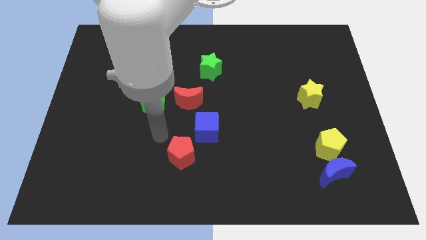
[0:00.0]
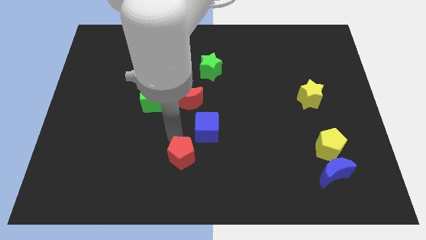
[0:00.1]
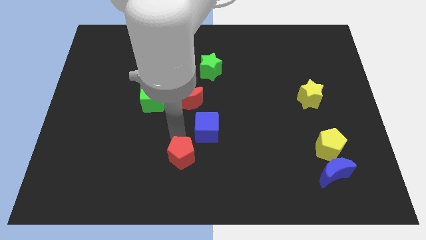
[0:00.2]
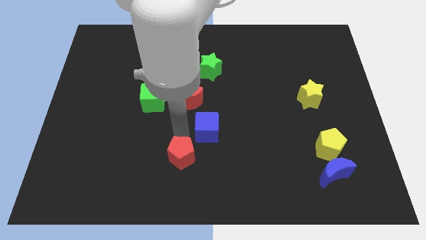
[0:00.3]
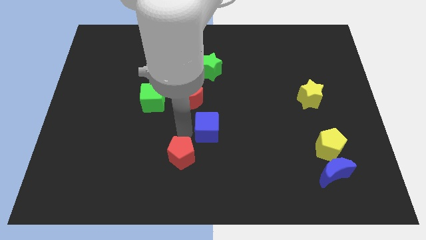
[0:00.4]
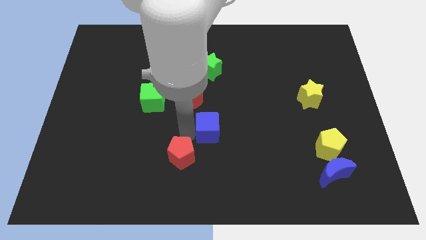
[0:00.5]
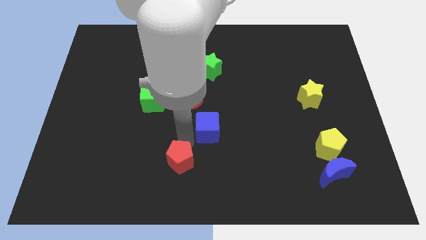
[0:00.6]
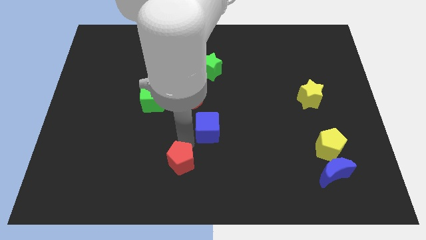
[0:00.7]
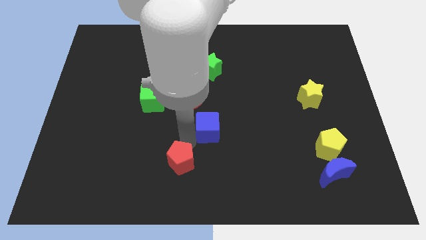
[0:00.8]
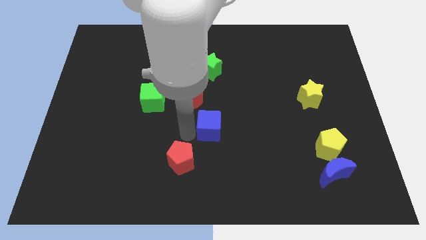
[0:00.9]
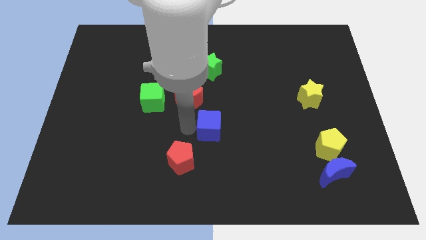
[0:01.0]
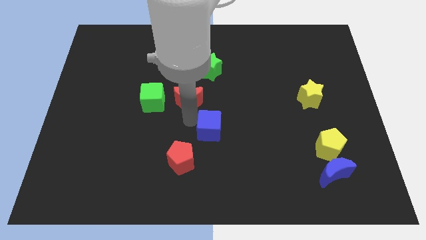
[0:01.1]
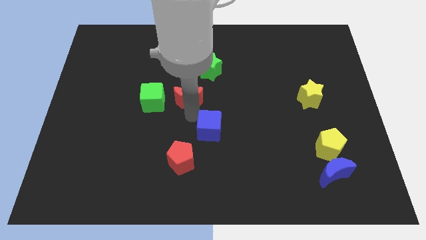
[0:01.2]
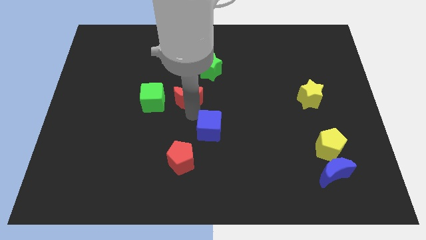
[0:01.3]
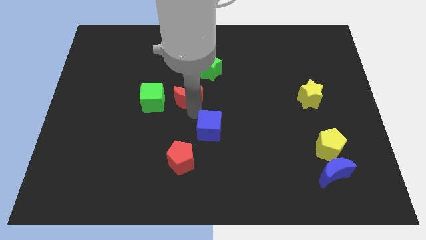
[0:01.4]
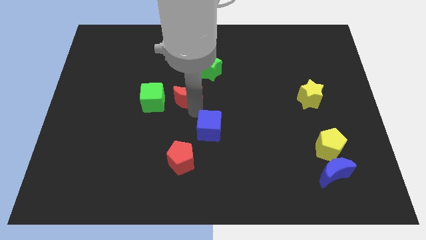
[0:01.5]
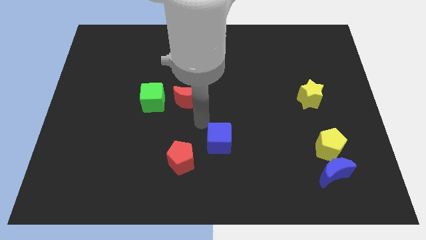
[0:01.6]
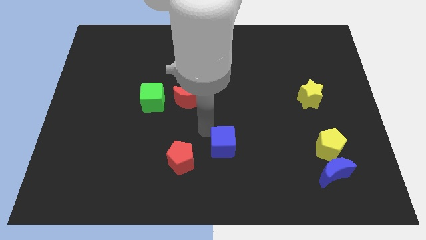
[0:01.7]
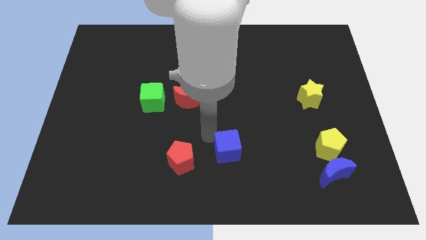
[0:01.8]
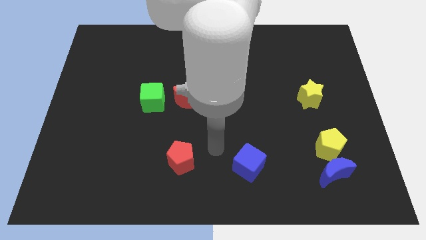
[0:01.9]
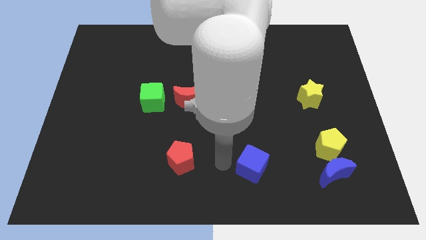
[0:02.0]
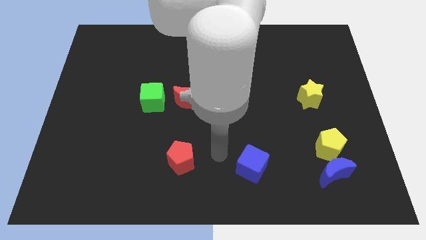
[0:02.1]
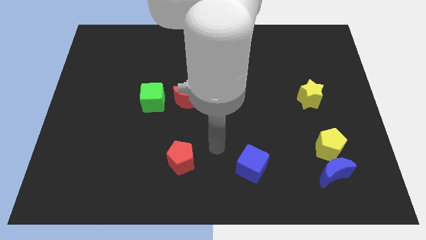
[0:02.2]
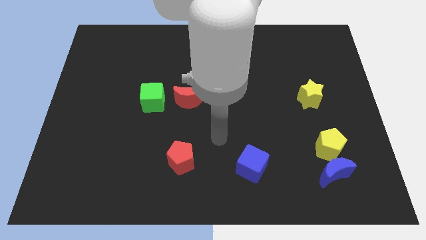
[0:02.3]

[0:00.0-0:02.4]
push the blue cube diagonal to yellow star

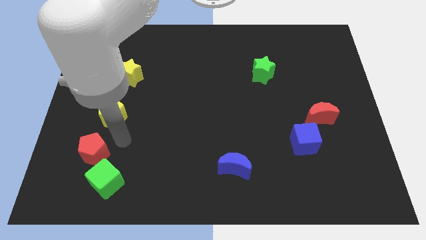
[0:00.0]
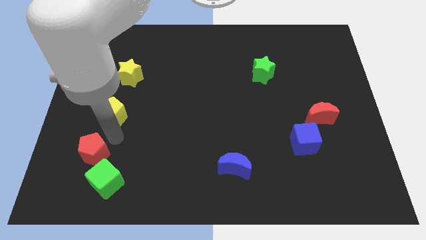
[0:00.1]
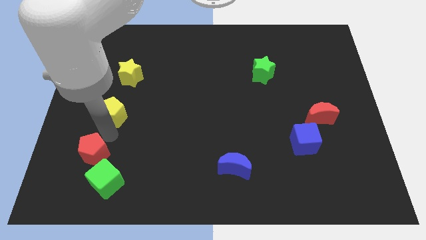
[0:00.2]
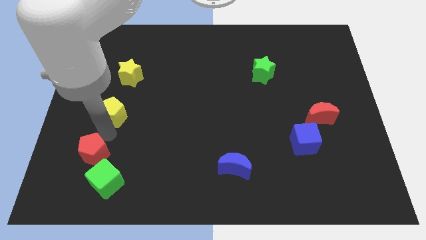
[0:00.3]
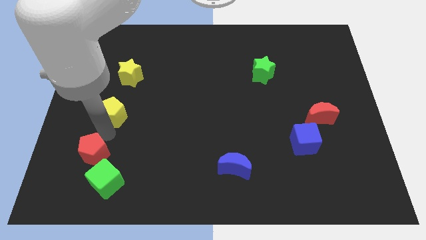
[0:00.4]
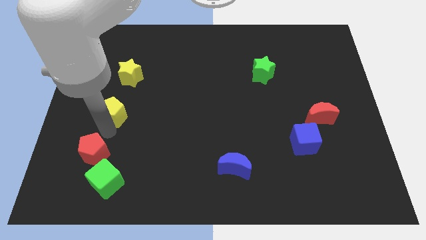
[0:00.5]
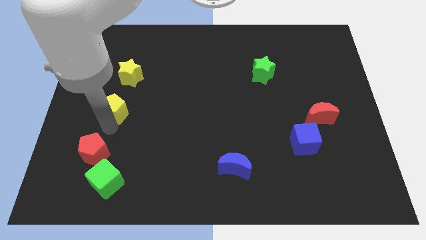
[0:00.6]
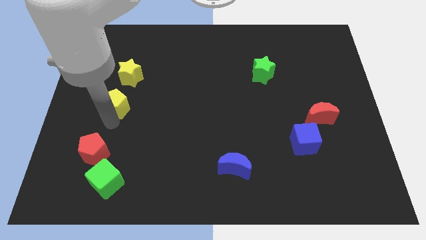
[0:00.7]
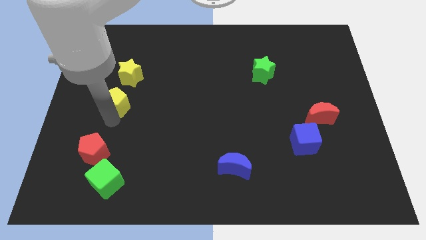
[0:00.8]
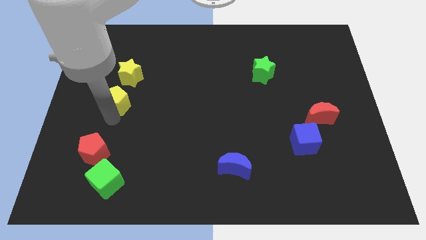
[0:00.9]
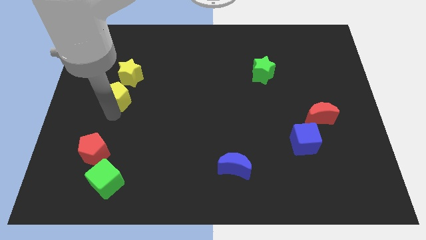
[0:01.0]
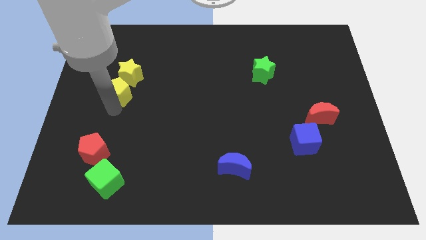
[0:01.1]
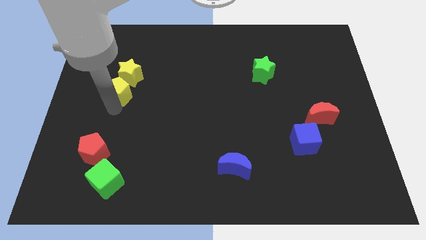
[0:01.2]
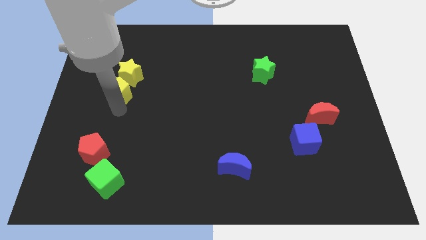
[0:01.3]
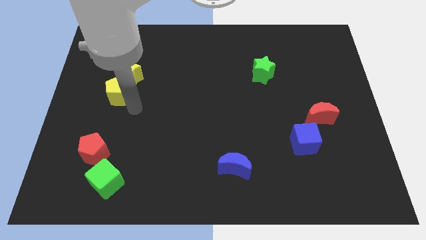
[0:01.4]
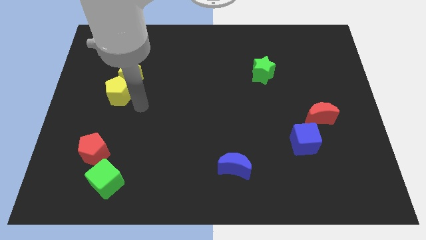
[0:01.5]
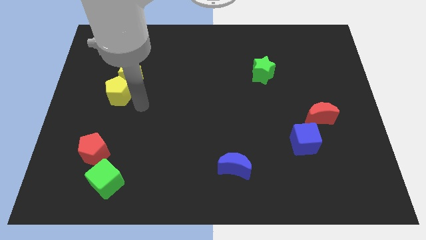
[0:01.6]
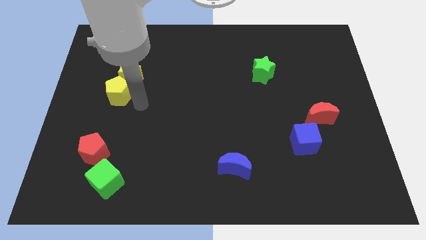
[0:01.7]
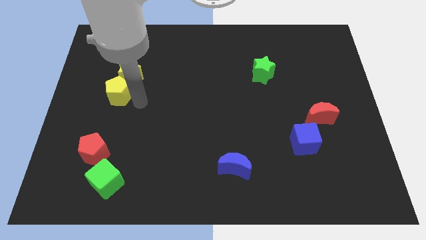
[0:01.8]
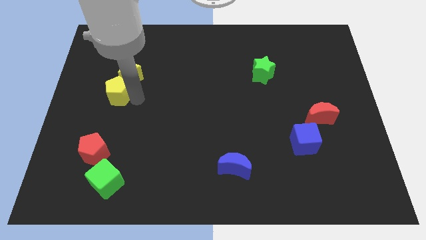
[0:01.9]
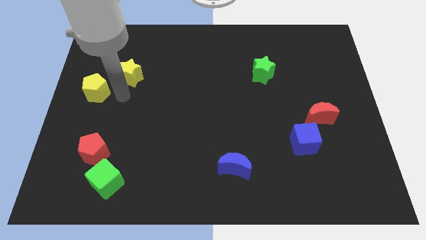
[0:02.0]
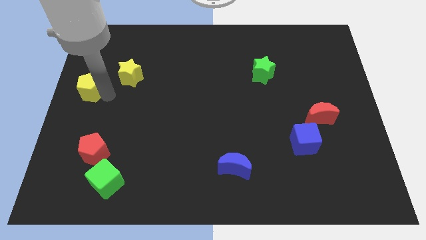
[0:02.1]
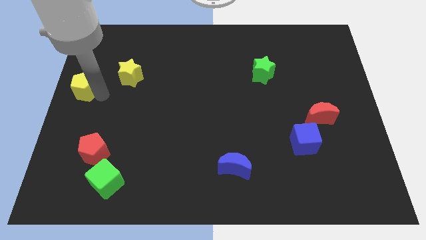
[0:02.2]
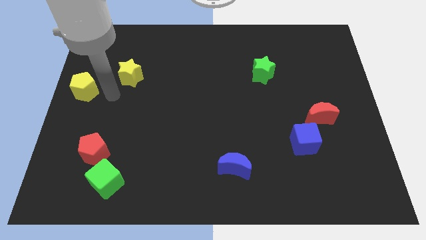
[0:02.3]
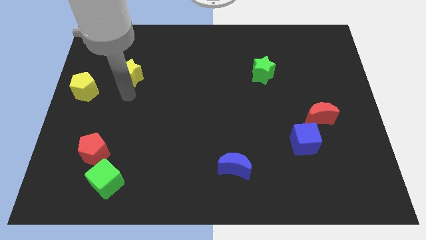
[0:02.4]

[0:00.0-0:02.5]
move yellow pentagon to center left

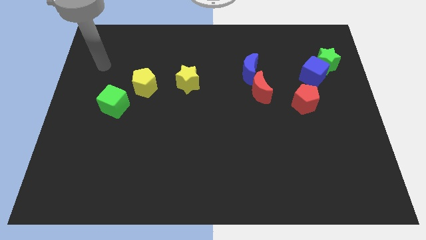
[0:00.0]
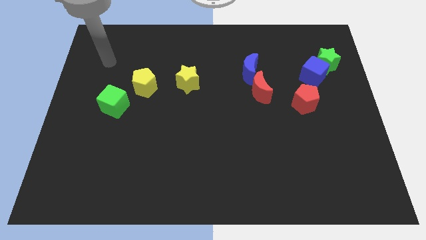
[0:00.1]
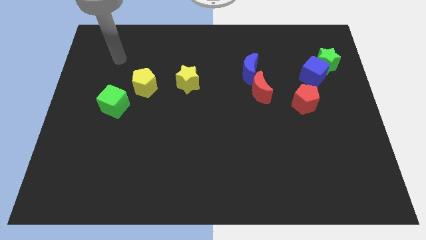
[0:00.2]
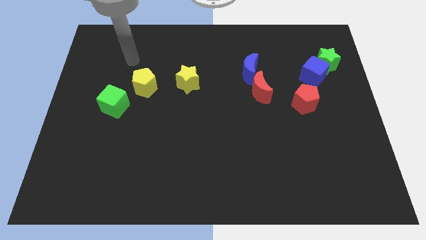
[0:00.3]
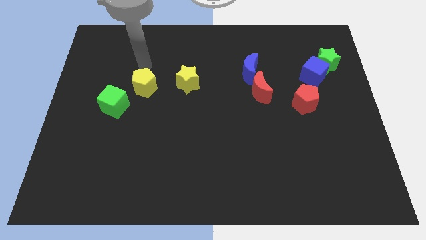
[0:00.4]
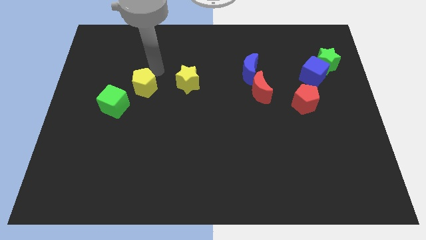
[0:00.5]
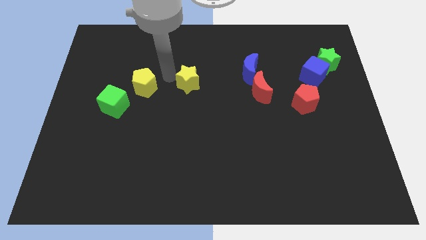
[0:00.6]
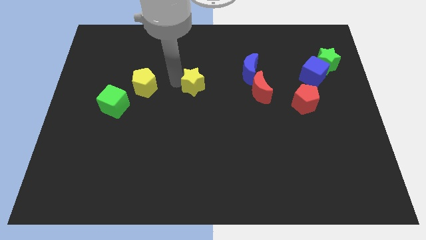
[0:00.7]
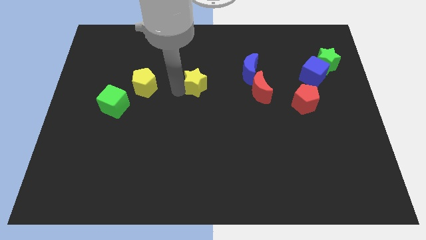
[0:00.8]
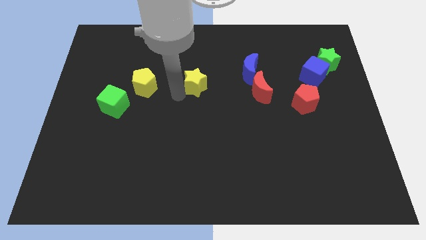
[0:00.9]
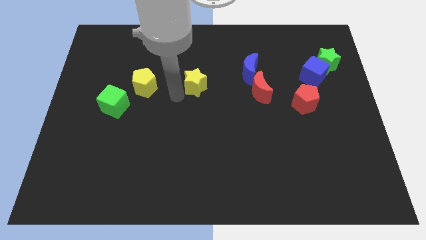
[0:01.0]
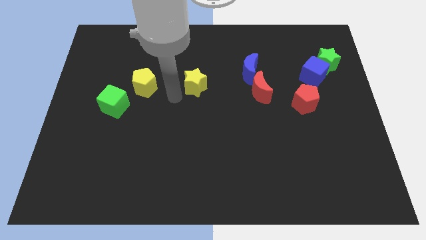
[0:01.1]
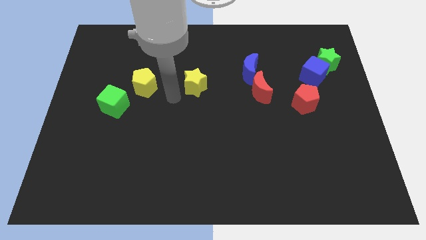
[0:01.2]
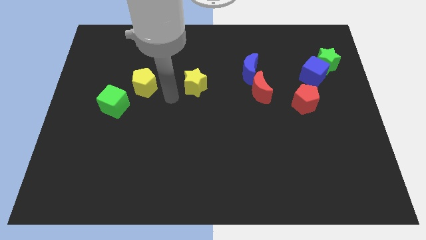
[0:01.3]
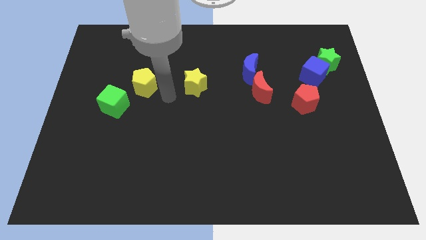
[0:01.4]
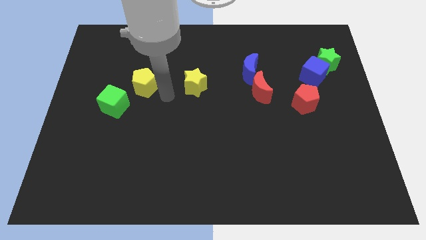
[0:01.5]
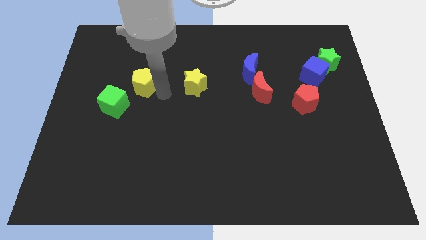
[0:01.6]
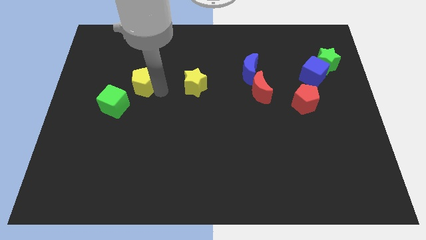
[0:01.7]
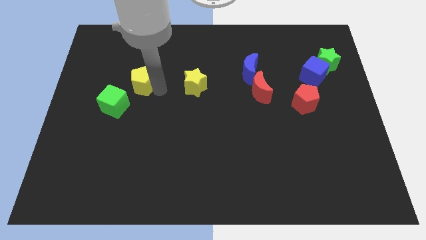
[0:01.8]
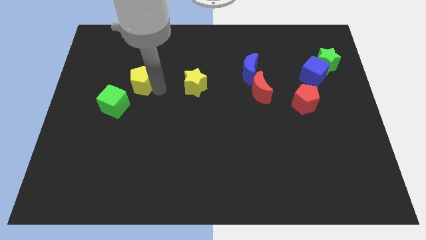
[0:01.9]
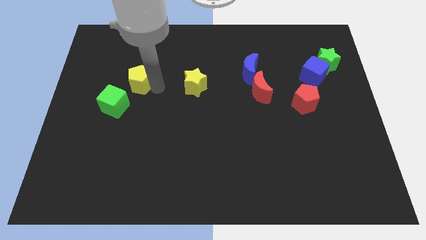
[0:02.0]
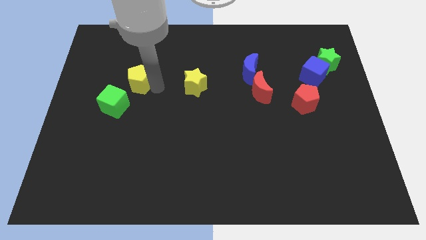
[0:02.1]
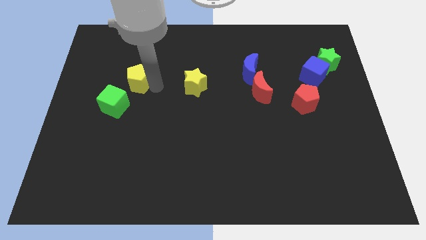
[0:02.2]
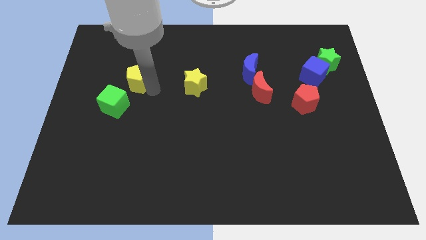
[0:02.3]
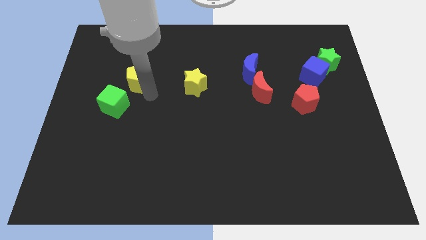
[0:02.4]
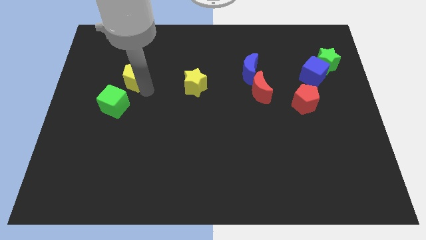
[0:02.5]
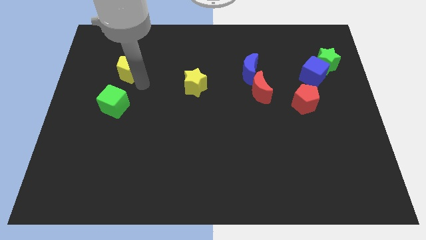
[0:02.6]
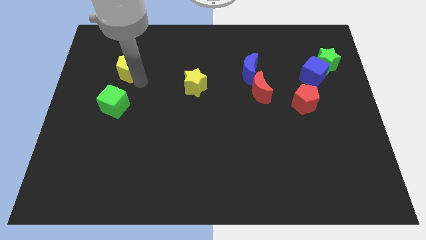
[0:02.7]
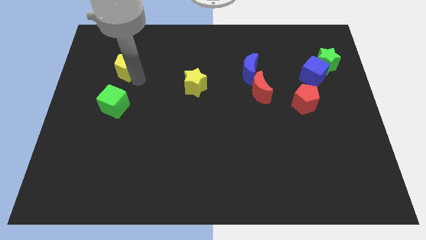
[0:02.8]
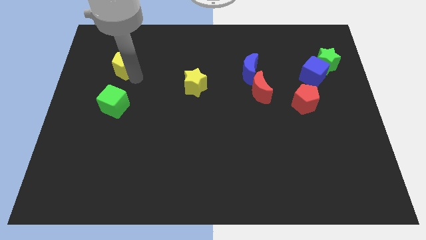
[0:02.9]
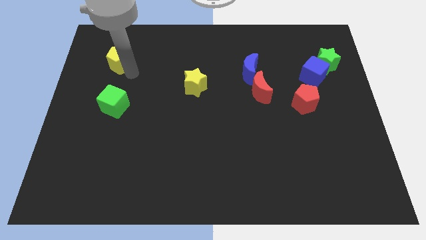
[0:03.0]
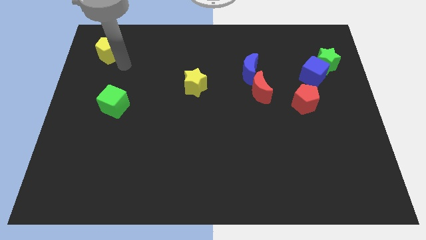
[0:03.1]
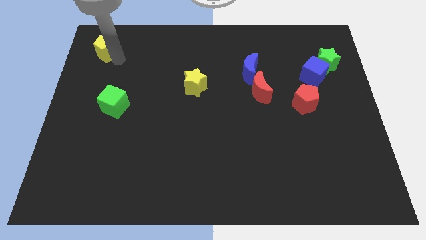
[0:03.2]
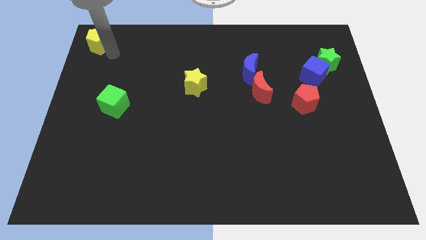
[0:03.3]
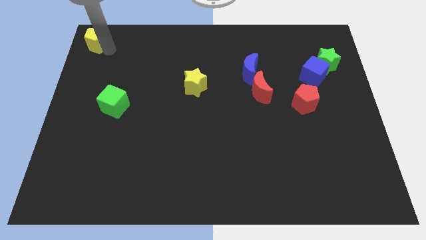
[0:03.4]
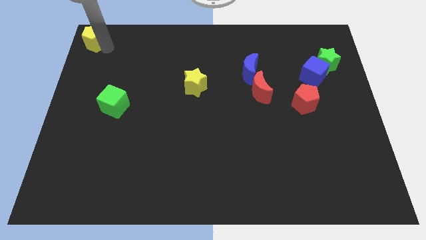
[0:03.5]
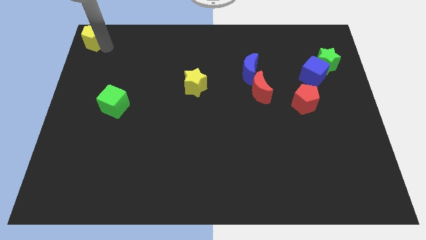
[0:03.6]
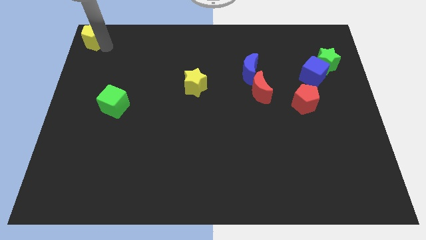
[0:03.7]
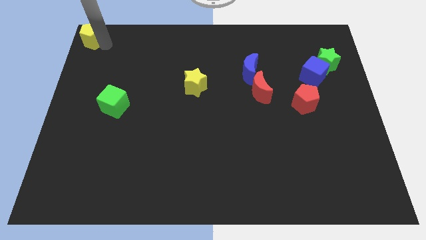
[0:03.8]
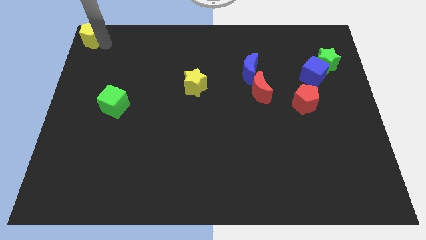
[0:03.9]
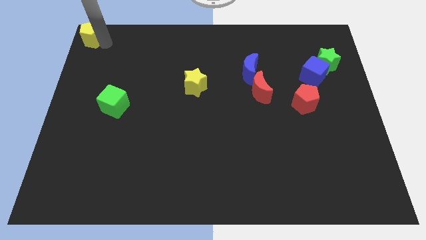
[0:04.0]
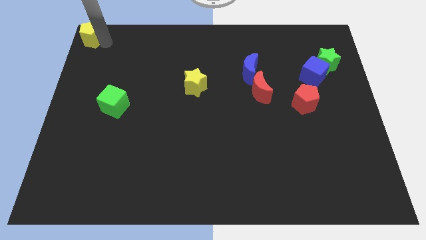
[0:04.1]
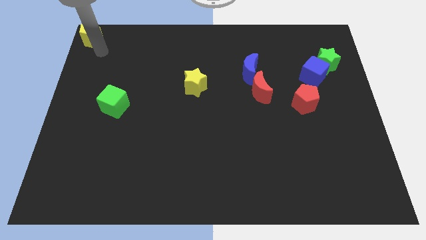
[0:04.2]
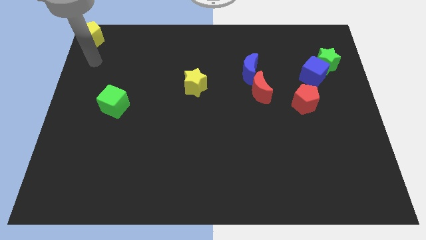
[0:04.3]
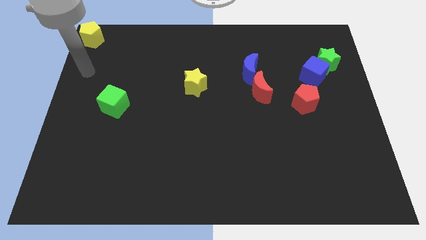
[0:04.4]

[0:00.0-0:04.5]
move the yellow star to the top left corner of the board
